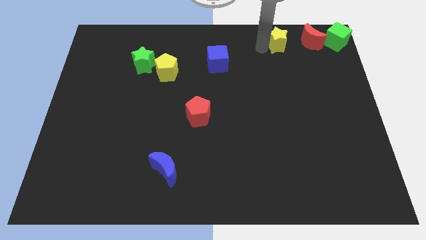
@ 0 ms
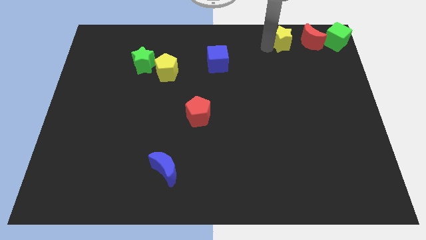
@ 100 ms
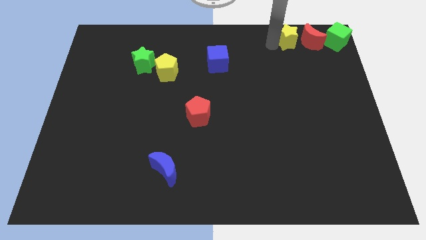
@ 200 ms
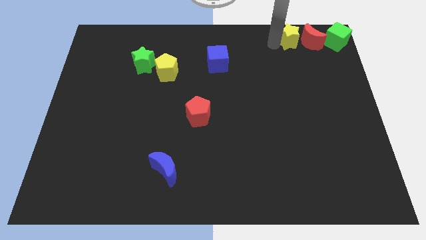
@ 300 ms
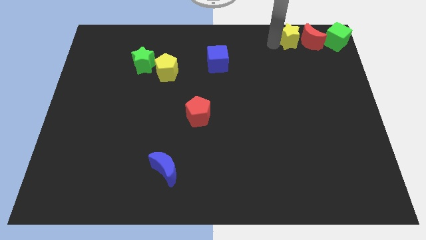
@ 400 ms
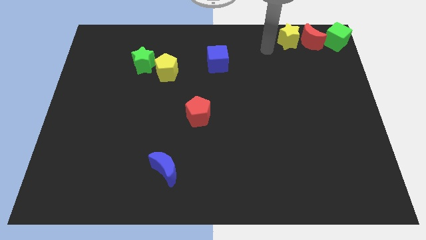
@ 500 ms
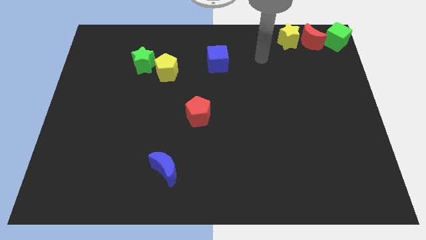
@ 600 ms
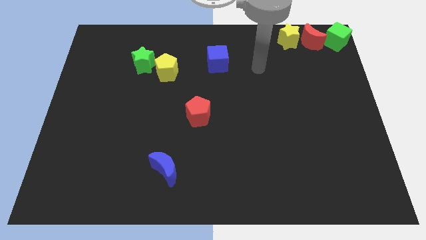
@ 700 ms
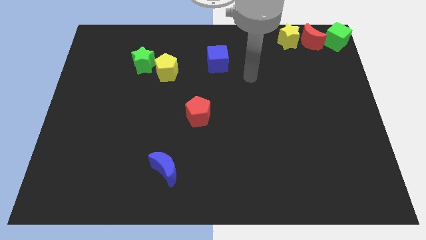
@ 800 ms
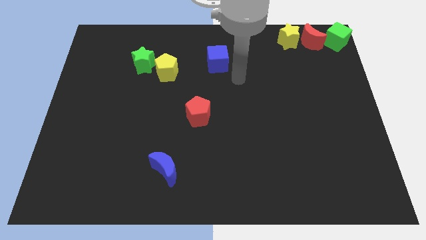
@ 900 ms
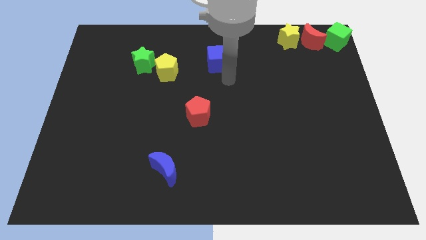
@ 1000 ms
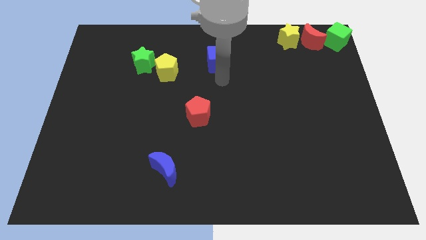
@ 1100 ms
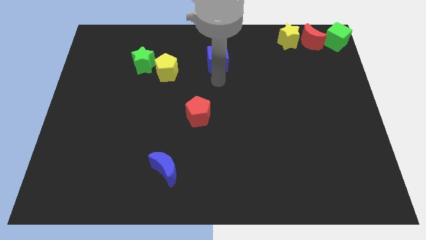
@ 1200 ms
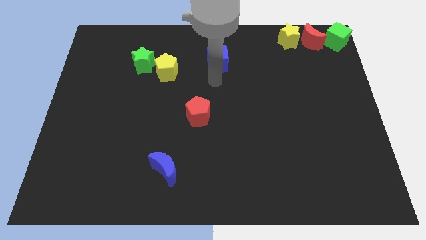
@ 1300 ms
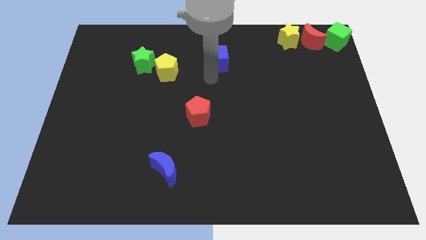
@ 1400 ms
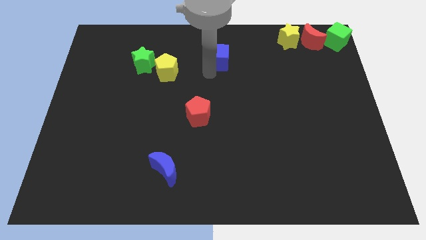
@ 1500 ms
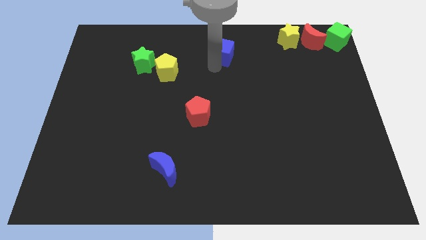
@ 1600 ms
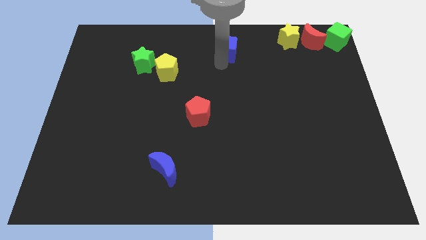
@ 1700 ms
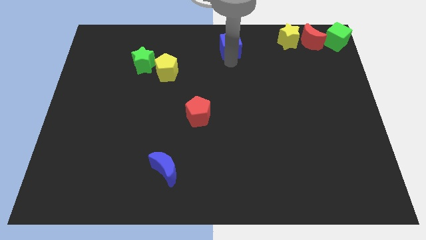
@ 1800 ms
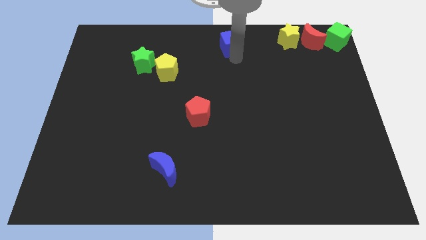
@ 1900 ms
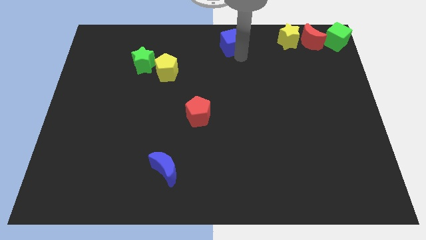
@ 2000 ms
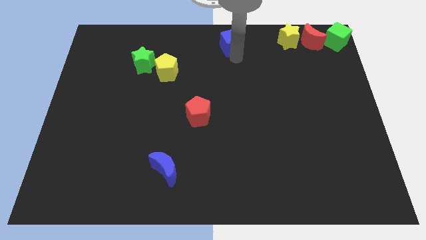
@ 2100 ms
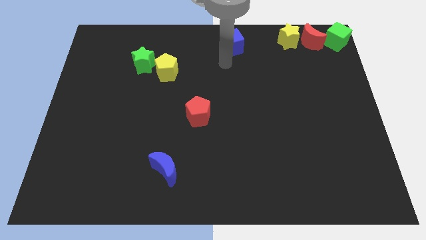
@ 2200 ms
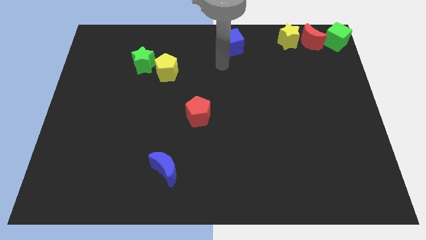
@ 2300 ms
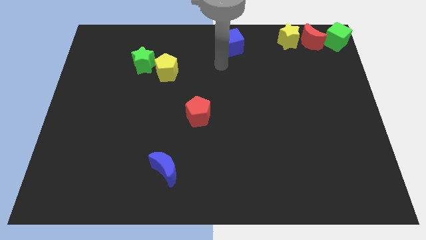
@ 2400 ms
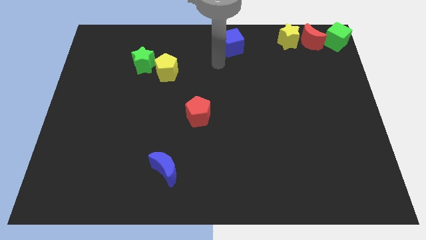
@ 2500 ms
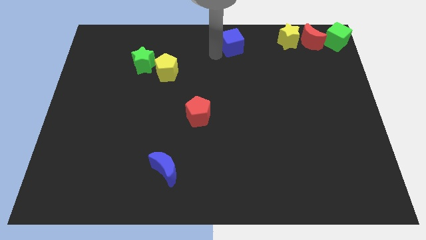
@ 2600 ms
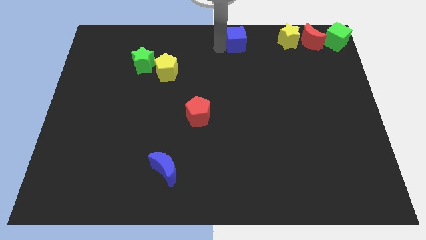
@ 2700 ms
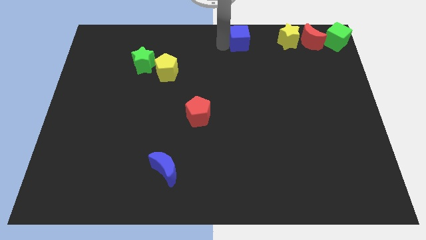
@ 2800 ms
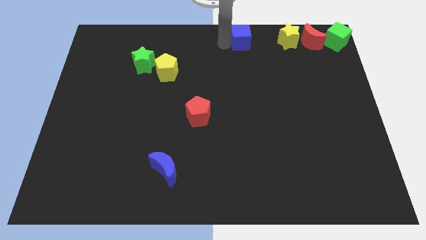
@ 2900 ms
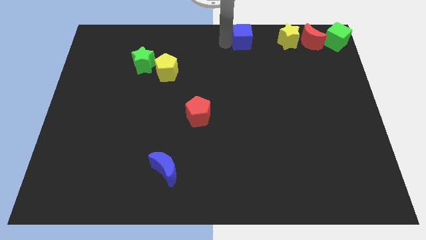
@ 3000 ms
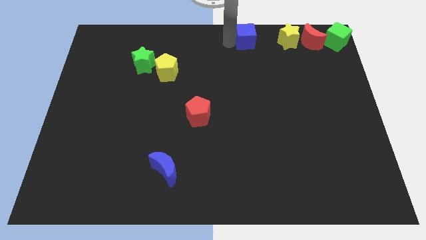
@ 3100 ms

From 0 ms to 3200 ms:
push the blue cube at the top center

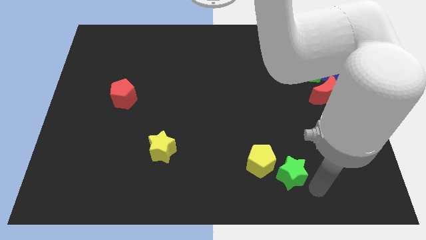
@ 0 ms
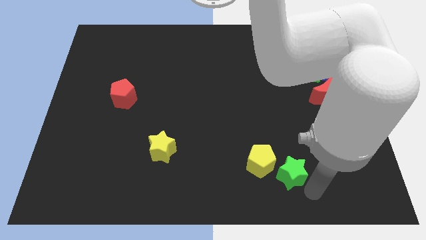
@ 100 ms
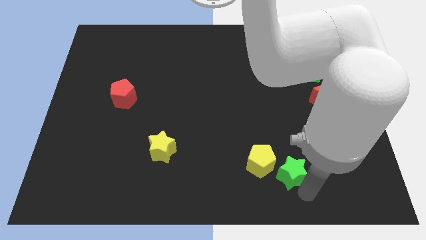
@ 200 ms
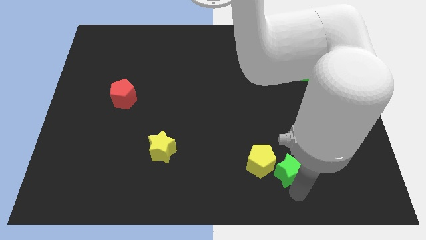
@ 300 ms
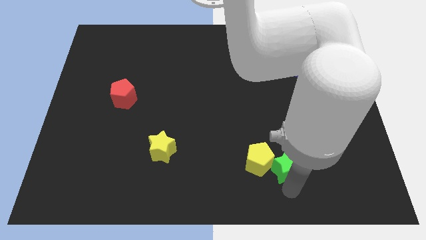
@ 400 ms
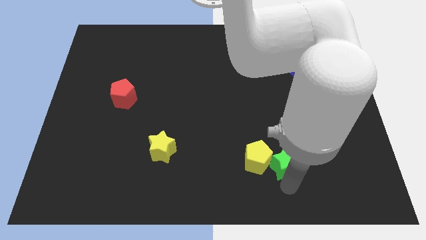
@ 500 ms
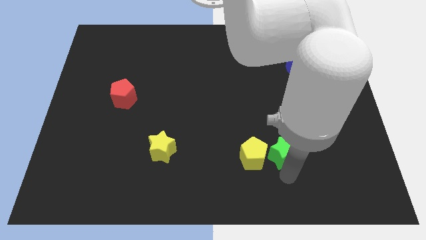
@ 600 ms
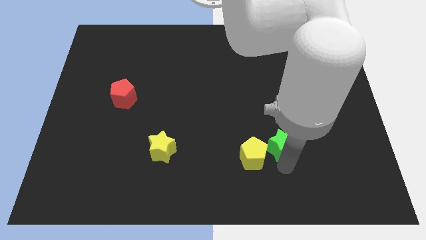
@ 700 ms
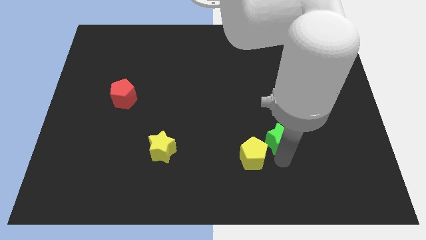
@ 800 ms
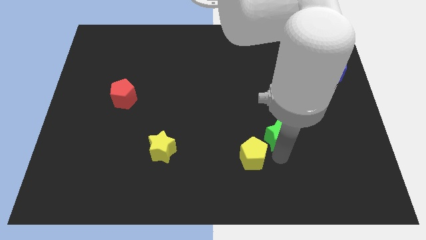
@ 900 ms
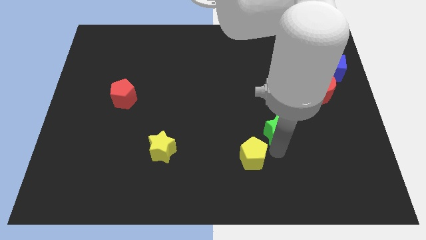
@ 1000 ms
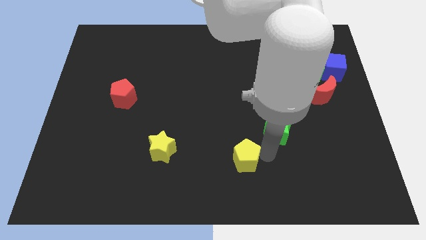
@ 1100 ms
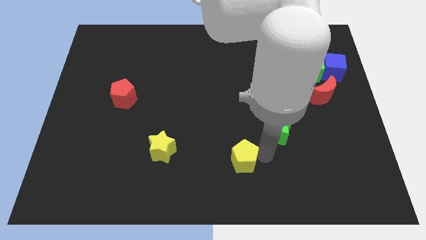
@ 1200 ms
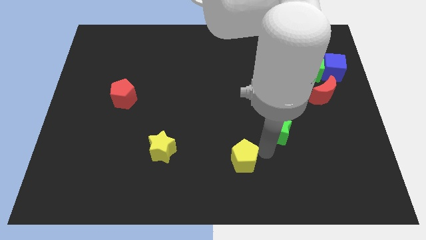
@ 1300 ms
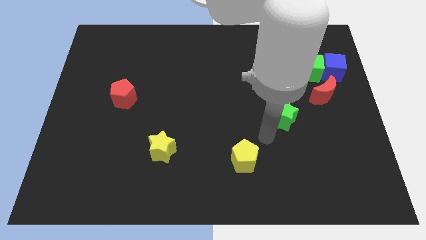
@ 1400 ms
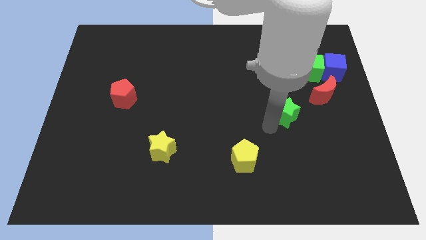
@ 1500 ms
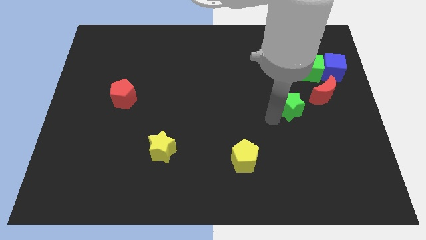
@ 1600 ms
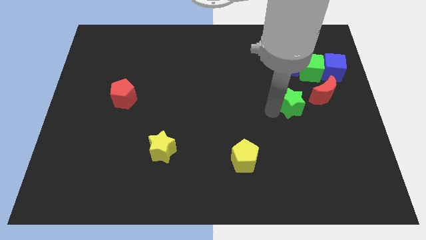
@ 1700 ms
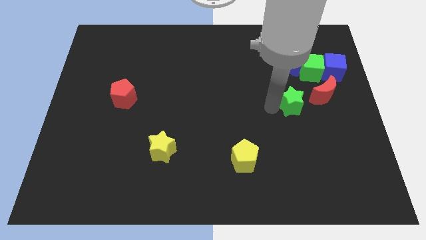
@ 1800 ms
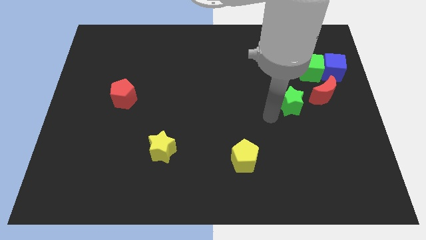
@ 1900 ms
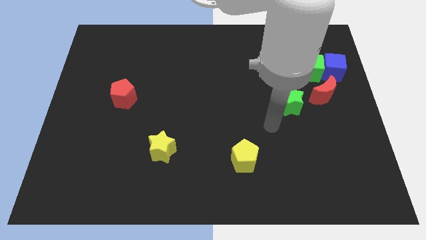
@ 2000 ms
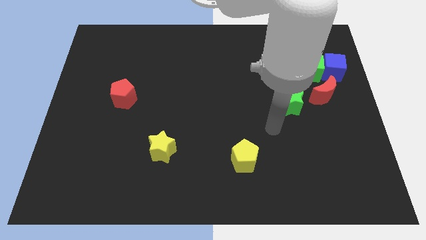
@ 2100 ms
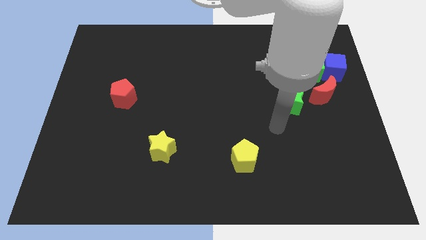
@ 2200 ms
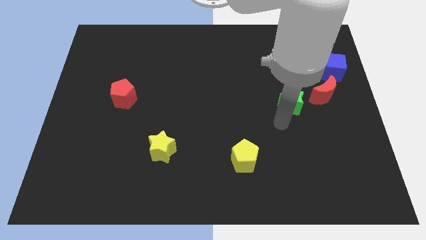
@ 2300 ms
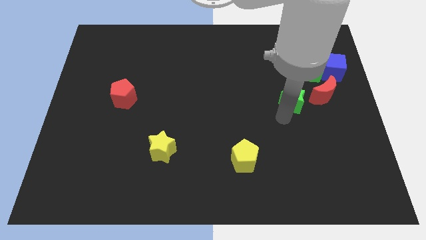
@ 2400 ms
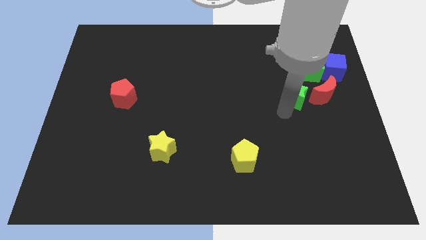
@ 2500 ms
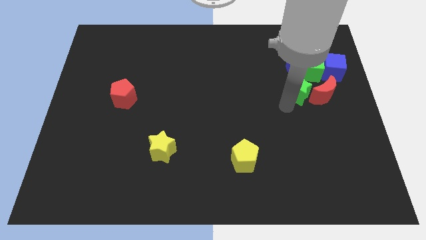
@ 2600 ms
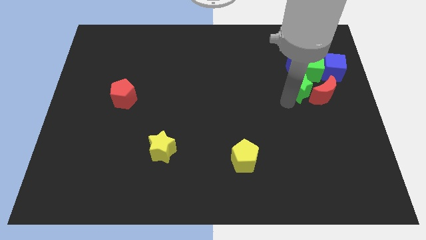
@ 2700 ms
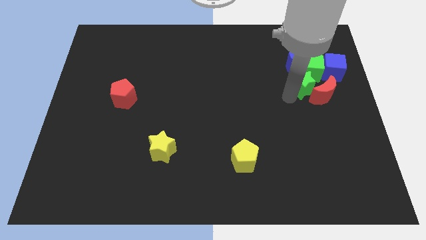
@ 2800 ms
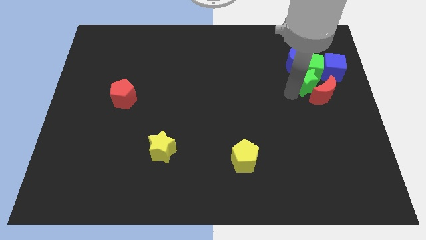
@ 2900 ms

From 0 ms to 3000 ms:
place the green star at the top left side of red crescent

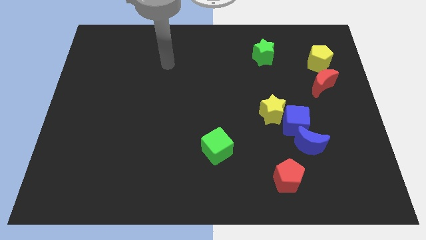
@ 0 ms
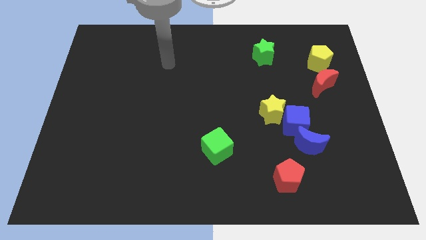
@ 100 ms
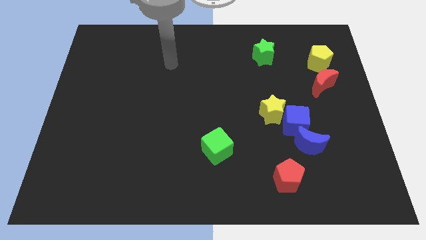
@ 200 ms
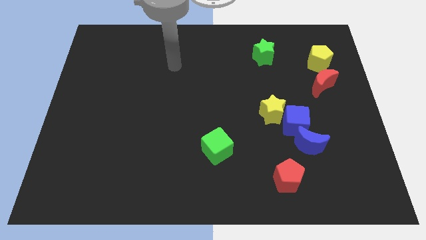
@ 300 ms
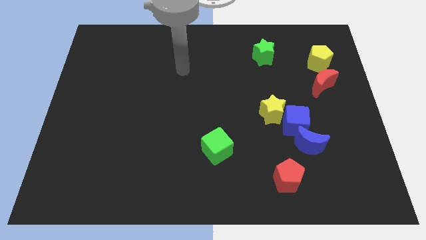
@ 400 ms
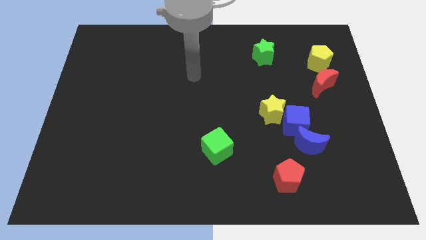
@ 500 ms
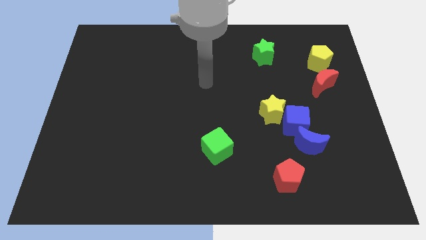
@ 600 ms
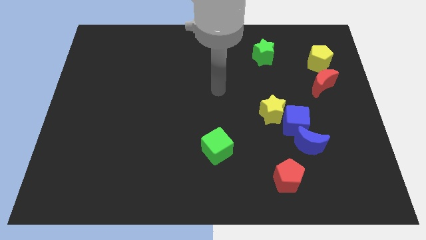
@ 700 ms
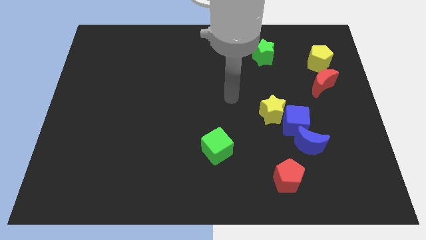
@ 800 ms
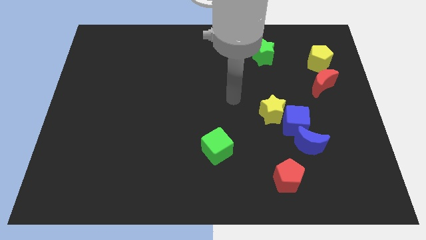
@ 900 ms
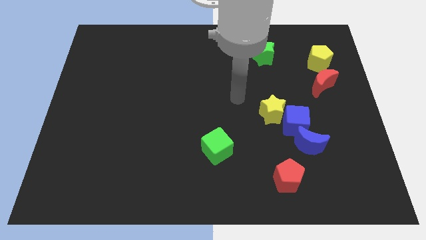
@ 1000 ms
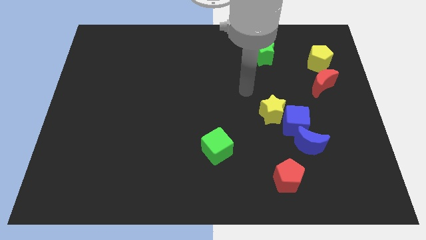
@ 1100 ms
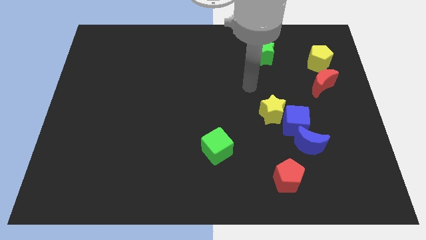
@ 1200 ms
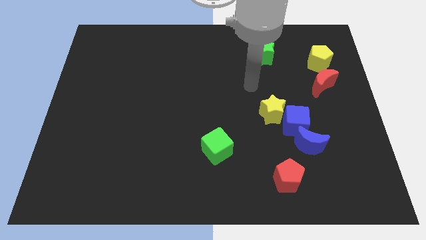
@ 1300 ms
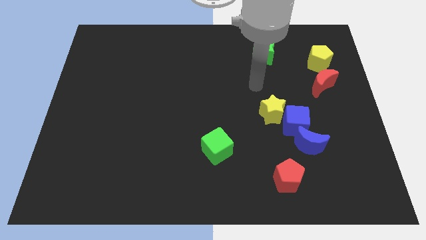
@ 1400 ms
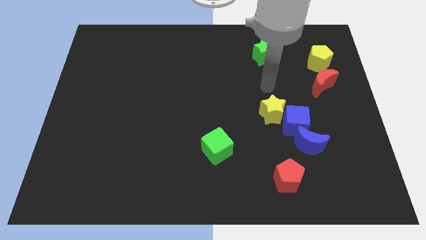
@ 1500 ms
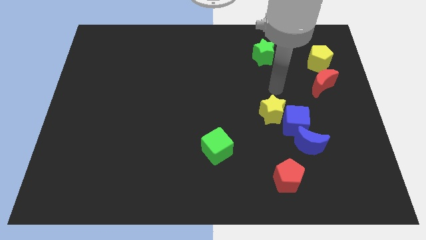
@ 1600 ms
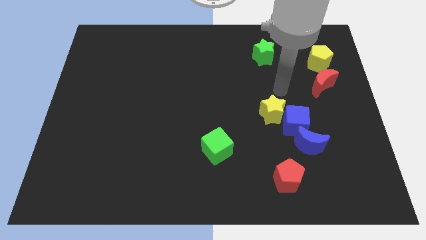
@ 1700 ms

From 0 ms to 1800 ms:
place the arm above the yellow star

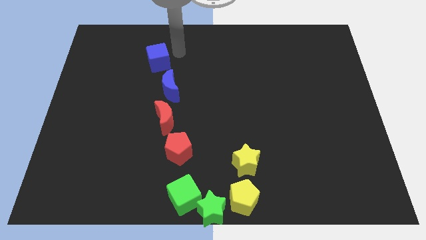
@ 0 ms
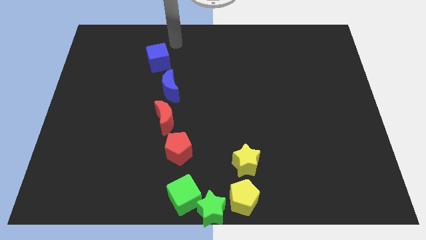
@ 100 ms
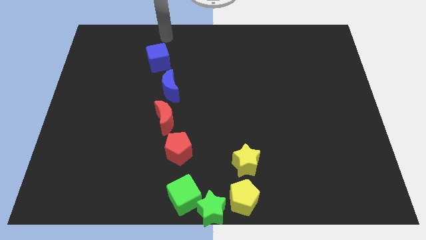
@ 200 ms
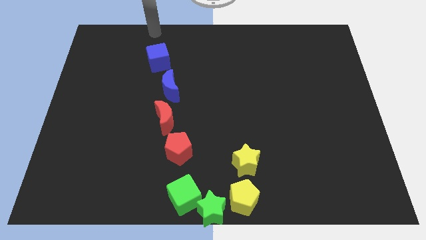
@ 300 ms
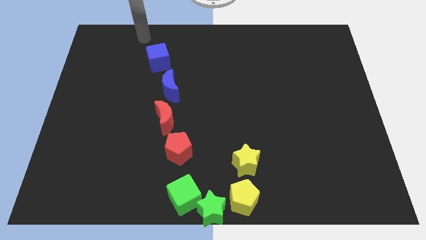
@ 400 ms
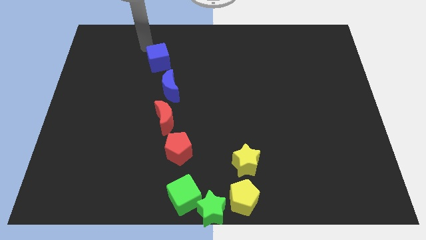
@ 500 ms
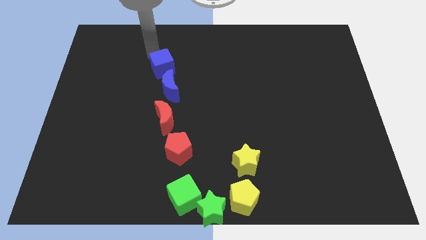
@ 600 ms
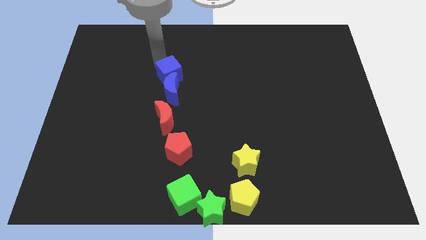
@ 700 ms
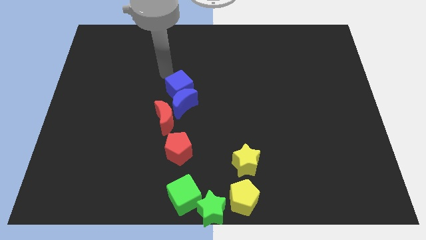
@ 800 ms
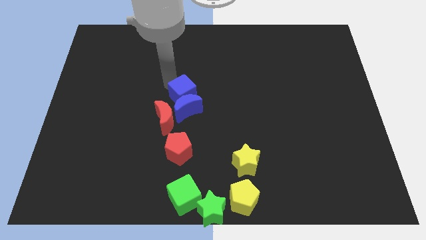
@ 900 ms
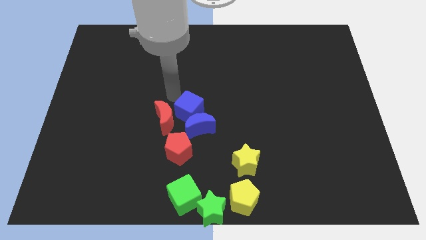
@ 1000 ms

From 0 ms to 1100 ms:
push the blue cube into the blue crescent
